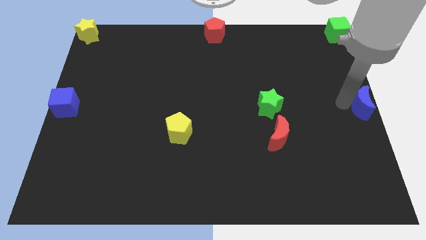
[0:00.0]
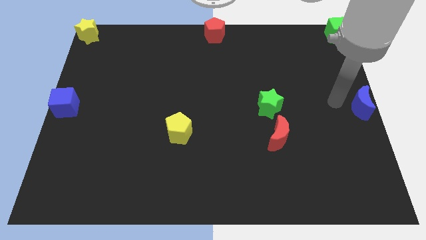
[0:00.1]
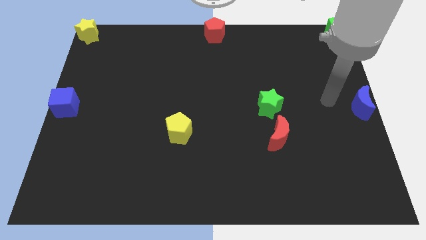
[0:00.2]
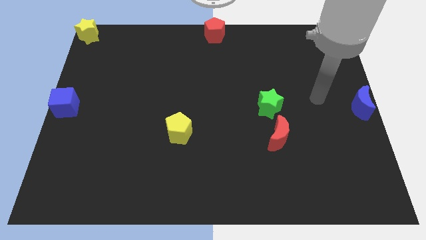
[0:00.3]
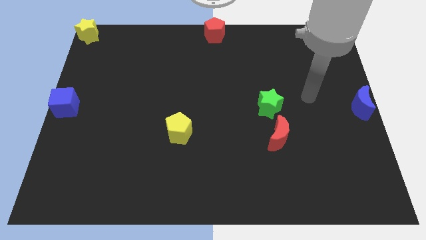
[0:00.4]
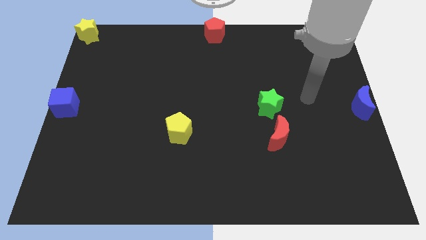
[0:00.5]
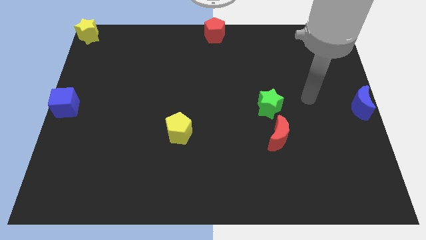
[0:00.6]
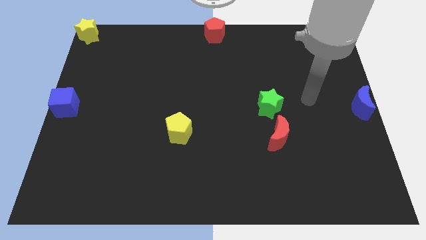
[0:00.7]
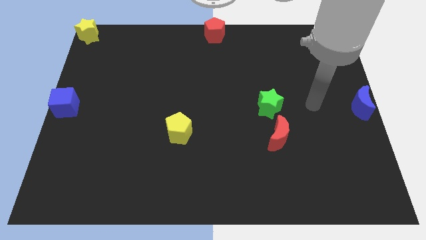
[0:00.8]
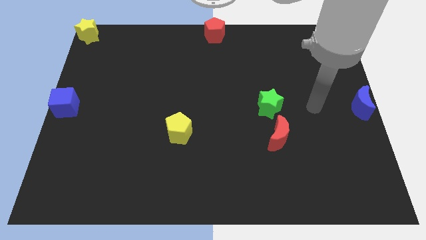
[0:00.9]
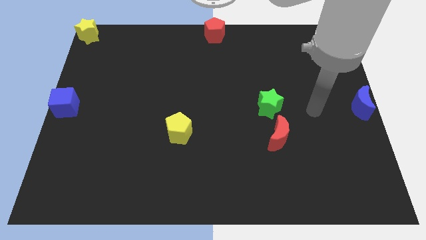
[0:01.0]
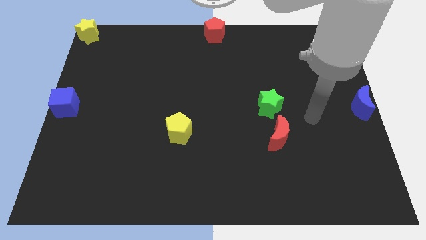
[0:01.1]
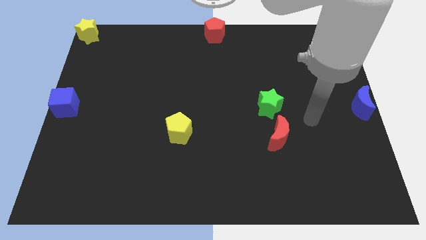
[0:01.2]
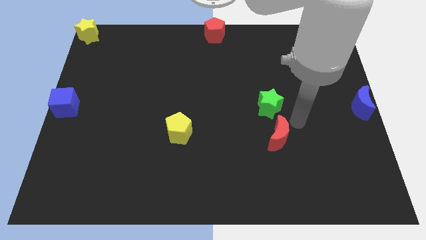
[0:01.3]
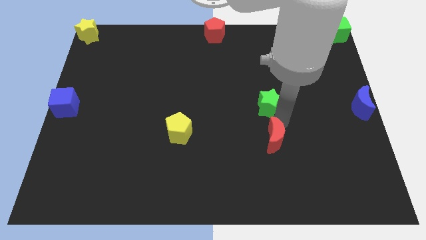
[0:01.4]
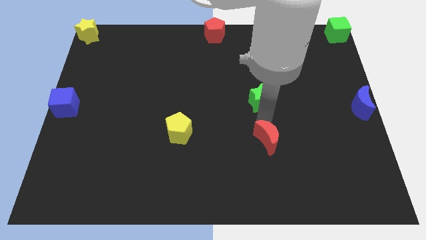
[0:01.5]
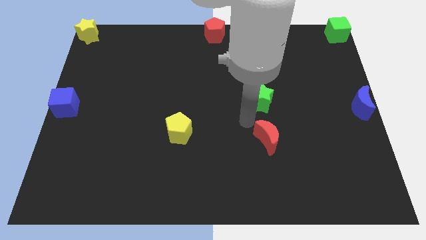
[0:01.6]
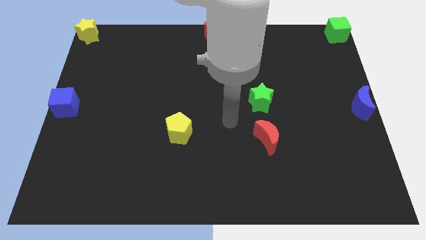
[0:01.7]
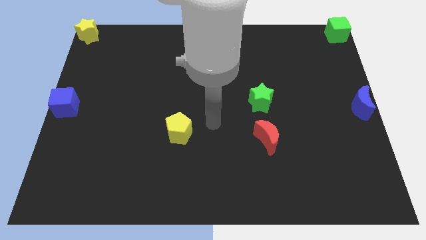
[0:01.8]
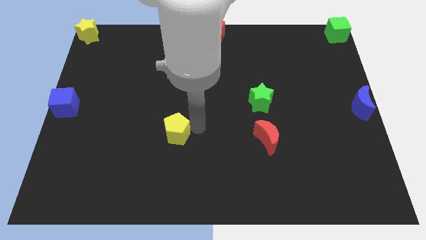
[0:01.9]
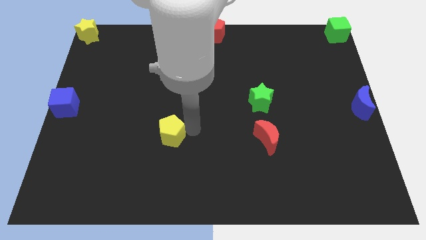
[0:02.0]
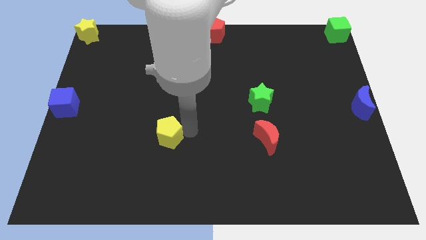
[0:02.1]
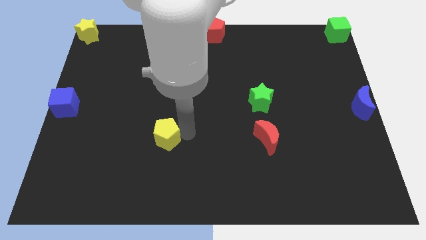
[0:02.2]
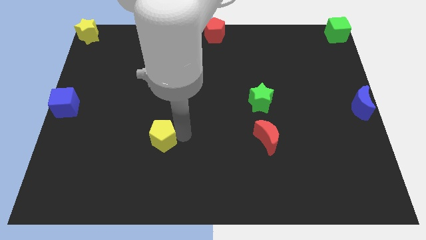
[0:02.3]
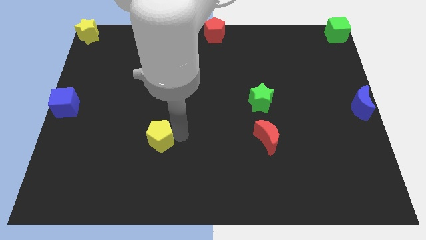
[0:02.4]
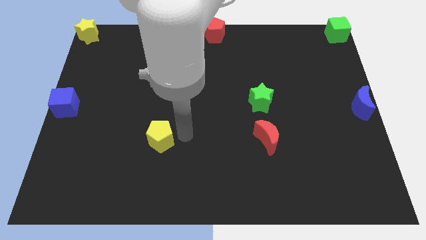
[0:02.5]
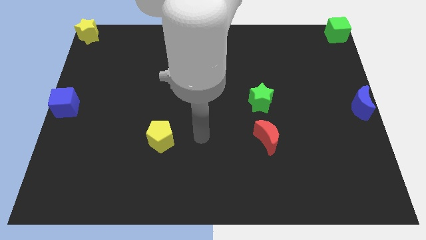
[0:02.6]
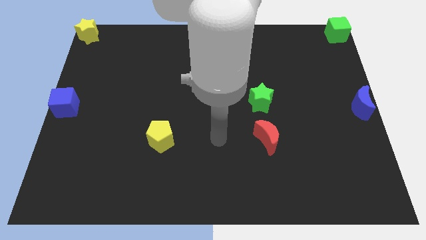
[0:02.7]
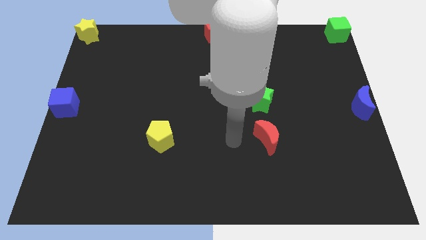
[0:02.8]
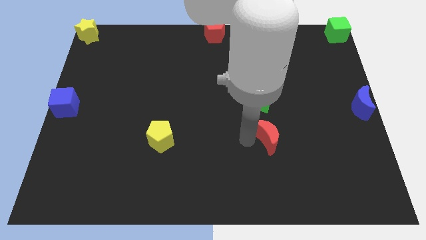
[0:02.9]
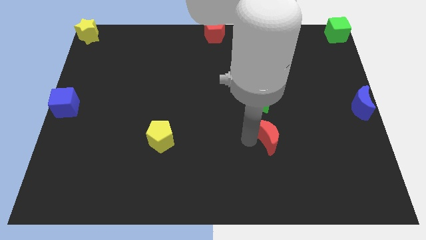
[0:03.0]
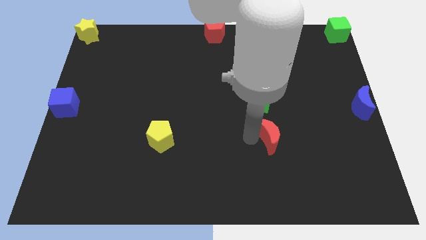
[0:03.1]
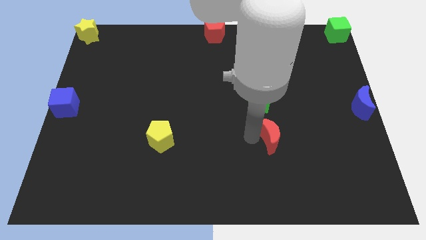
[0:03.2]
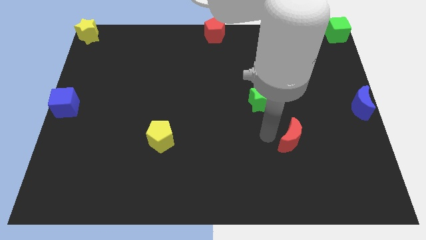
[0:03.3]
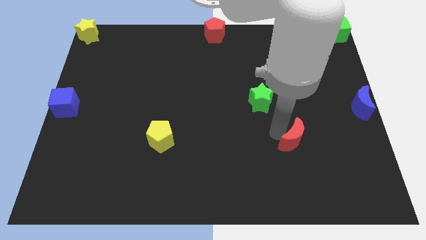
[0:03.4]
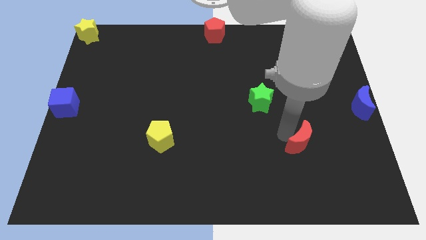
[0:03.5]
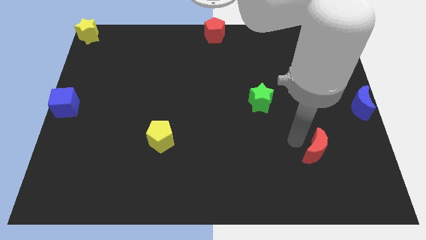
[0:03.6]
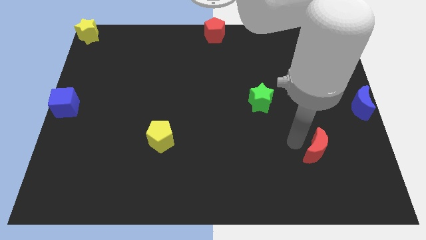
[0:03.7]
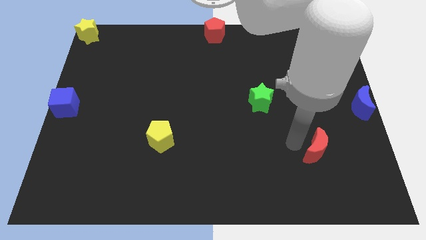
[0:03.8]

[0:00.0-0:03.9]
push red crescent towards bottom

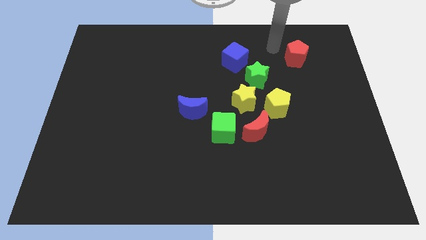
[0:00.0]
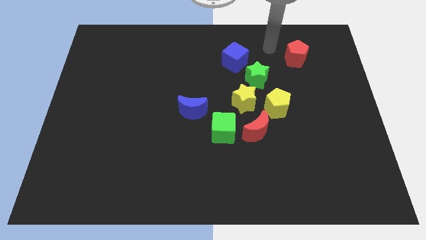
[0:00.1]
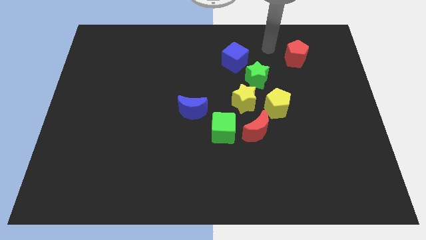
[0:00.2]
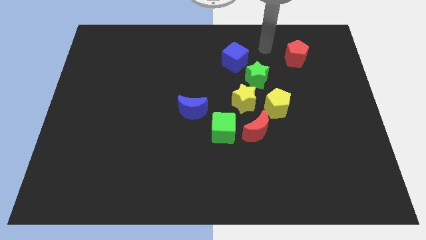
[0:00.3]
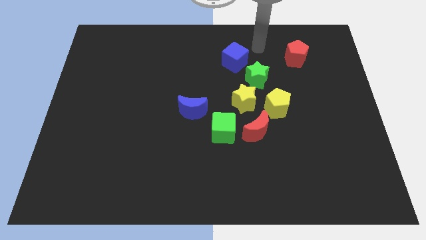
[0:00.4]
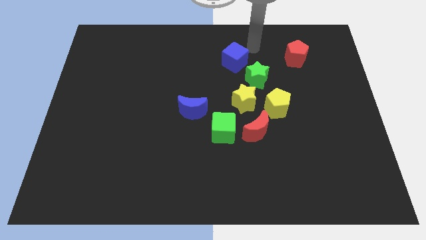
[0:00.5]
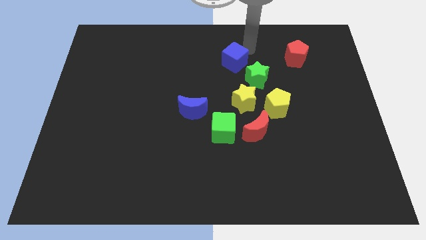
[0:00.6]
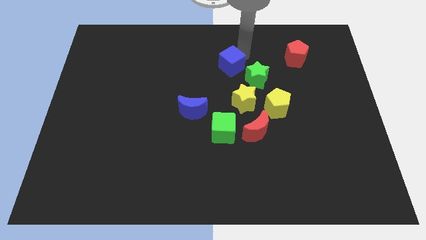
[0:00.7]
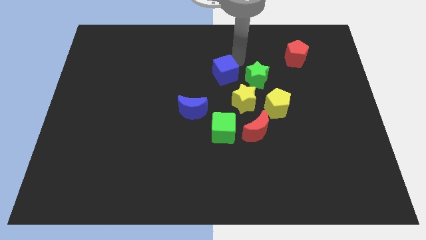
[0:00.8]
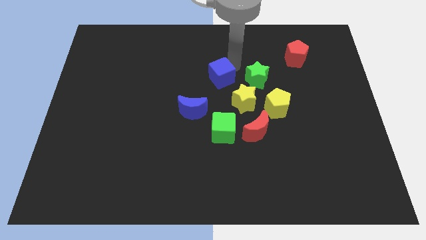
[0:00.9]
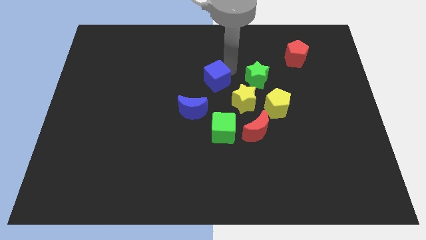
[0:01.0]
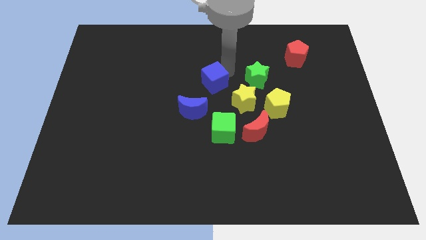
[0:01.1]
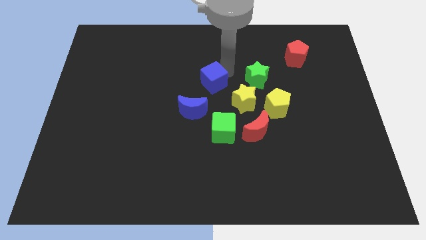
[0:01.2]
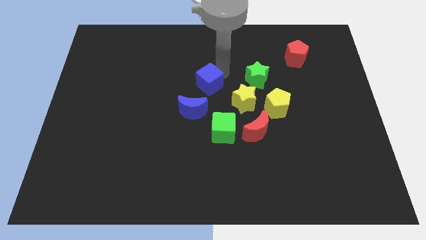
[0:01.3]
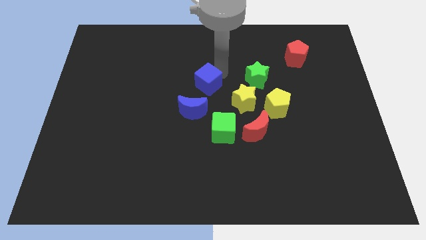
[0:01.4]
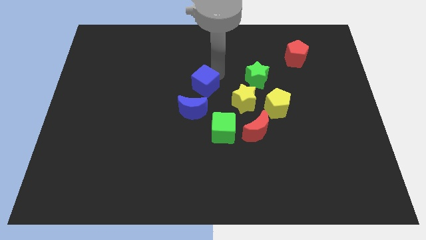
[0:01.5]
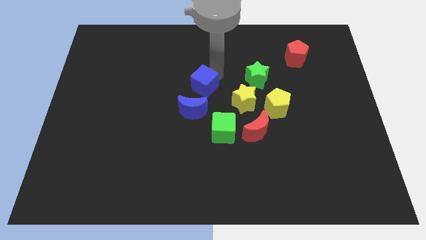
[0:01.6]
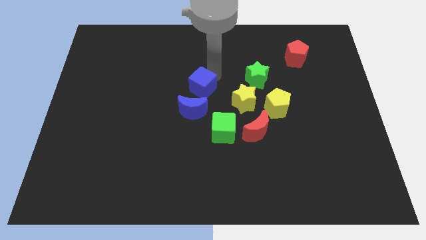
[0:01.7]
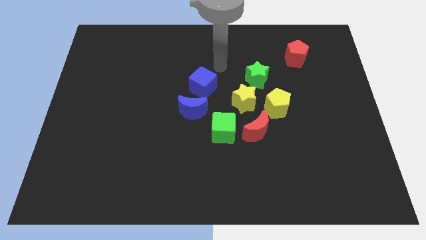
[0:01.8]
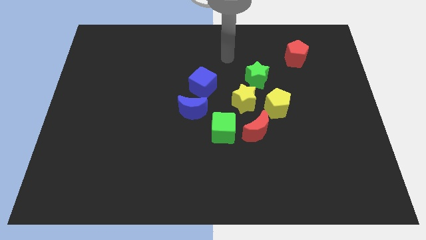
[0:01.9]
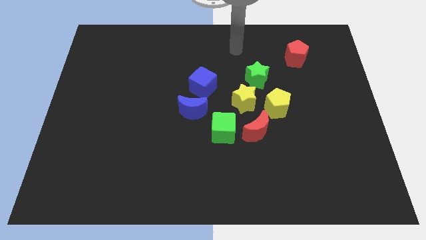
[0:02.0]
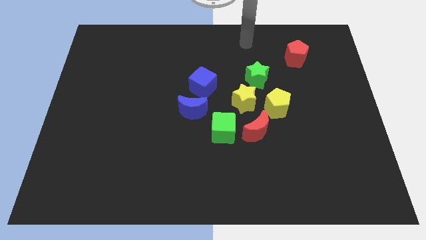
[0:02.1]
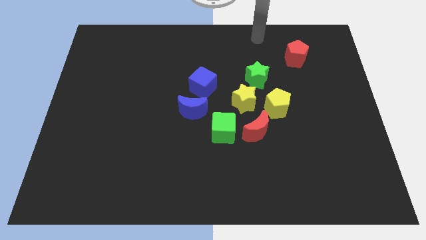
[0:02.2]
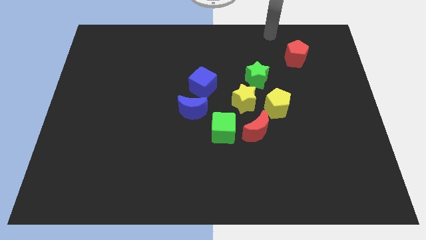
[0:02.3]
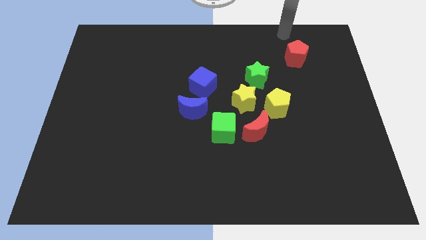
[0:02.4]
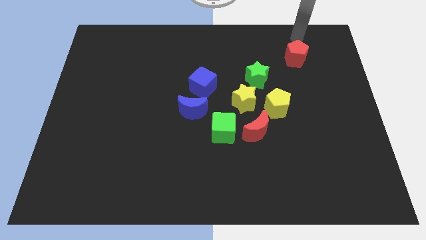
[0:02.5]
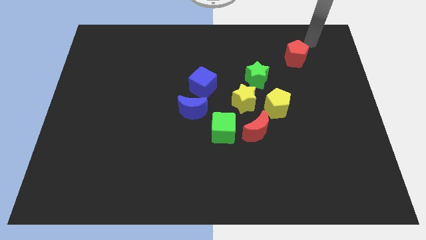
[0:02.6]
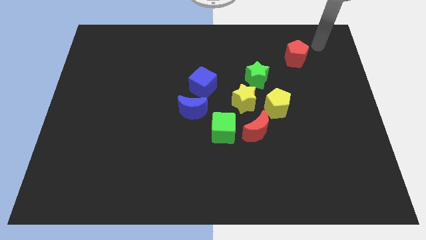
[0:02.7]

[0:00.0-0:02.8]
place the blue cube to the left side of green star

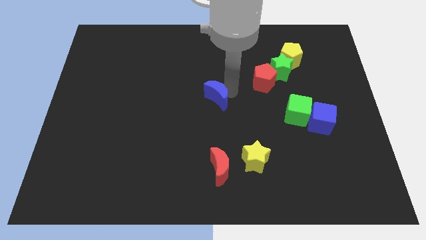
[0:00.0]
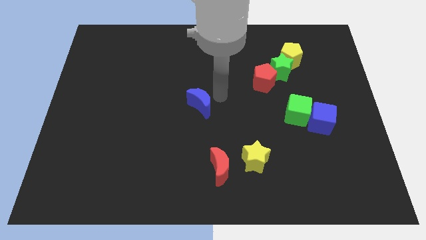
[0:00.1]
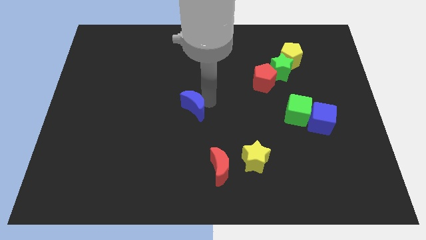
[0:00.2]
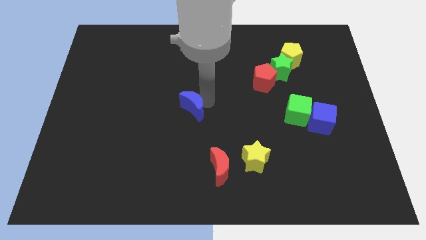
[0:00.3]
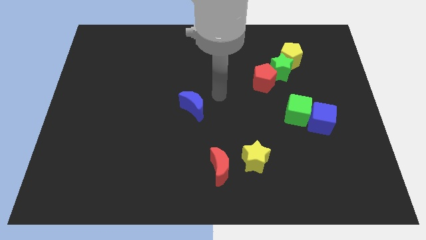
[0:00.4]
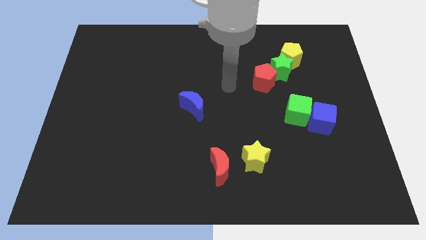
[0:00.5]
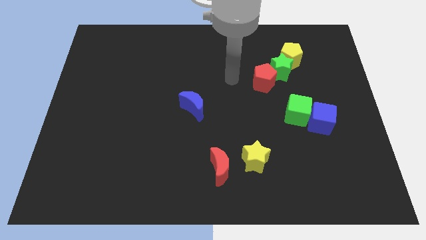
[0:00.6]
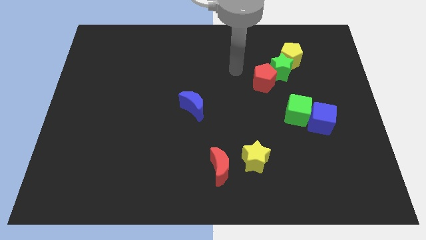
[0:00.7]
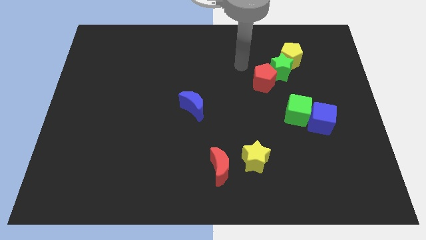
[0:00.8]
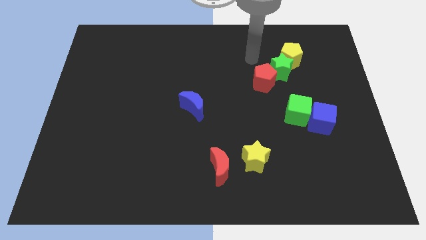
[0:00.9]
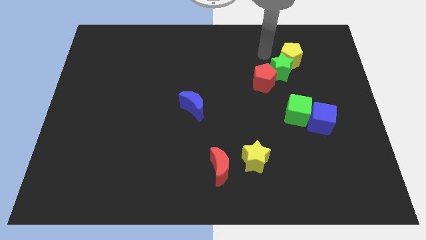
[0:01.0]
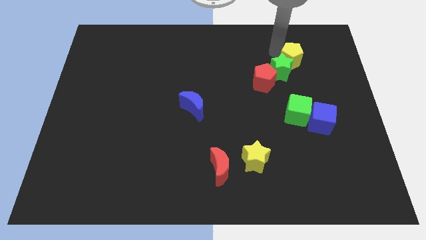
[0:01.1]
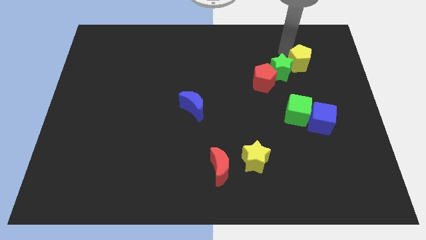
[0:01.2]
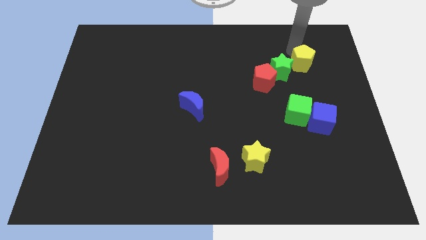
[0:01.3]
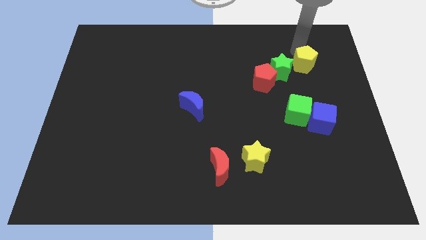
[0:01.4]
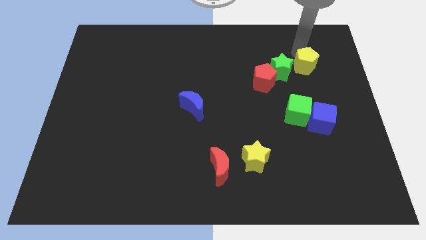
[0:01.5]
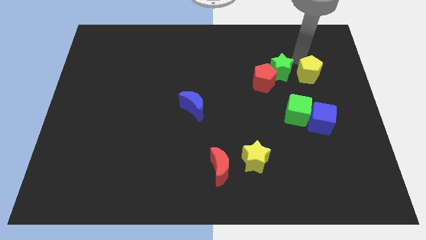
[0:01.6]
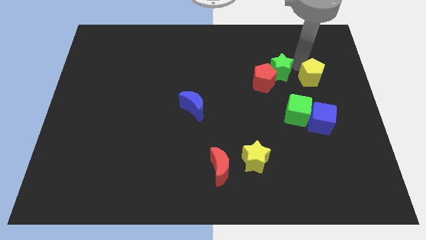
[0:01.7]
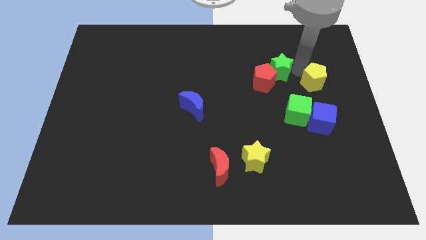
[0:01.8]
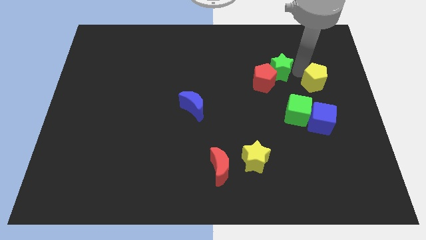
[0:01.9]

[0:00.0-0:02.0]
separate the yellow pentagon from the green star

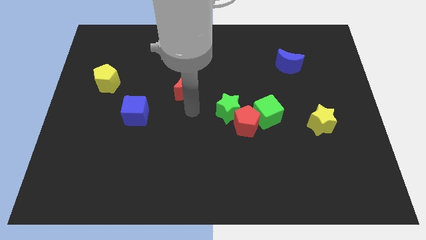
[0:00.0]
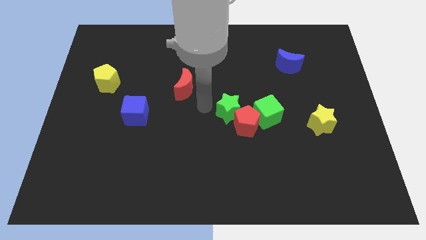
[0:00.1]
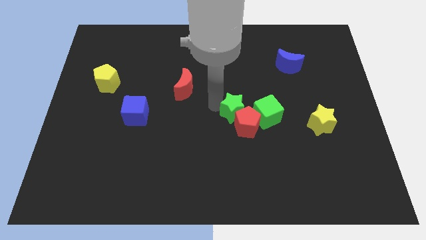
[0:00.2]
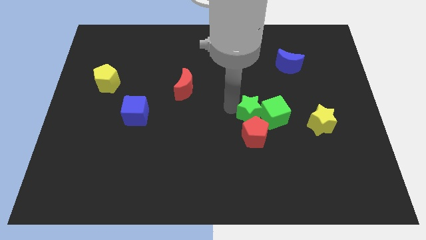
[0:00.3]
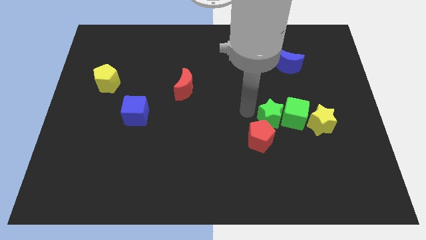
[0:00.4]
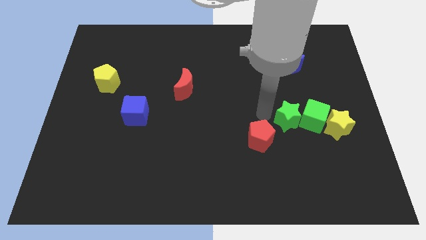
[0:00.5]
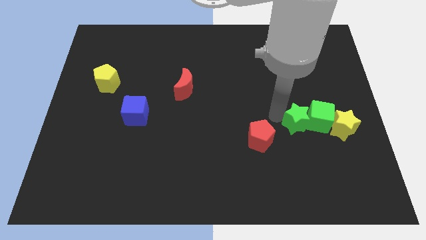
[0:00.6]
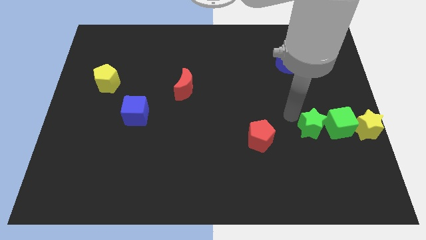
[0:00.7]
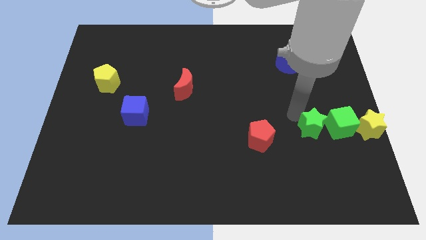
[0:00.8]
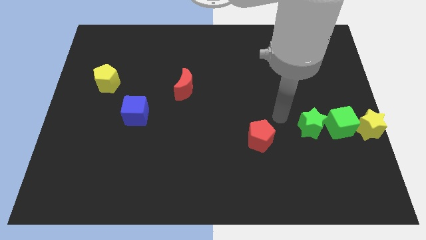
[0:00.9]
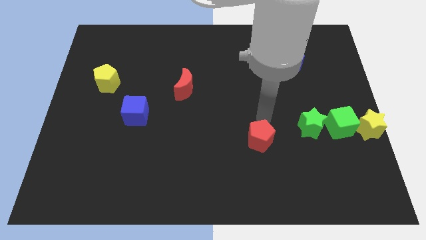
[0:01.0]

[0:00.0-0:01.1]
push the green star towards the center right
